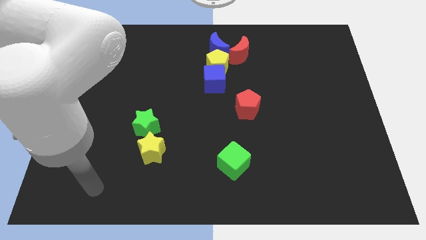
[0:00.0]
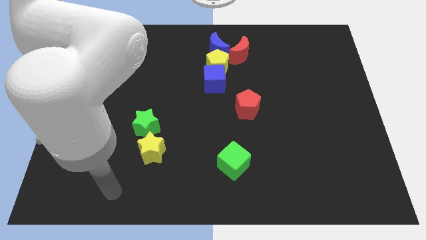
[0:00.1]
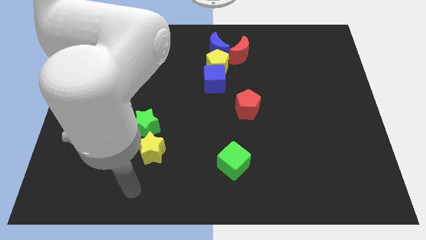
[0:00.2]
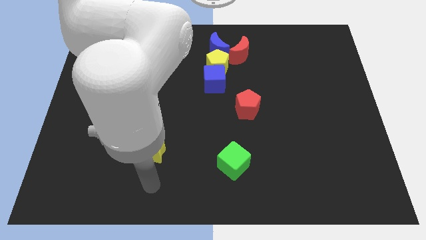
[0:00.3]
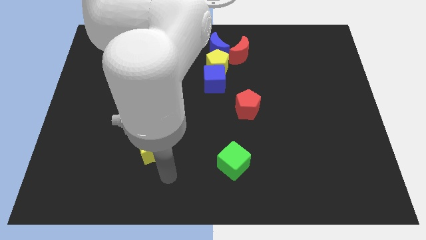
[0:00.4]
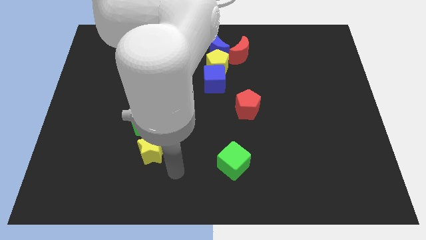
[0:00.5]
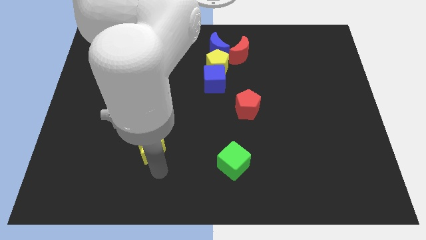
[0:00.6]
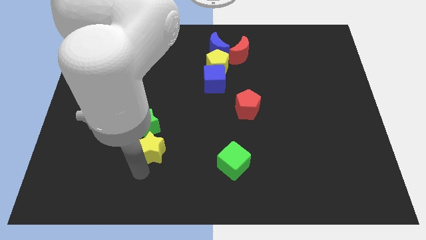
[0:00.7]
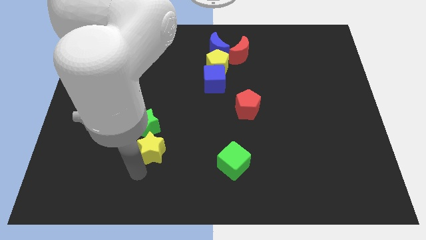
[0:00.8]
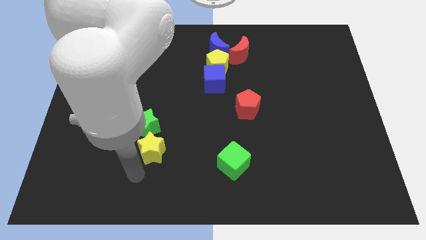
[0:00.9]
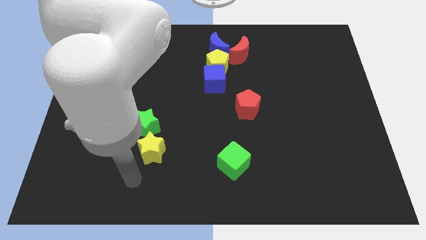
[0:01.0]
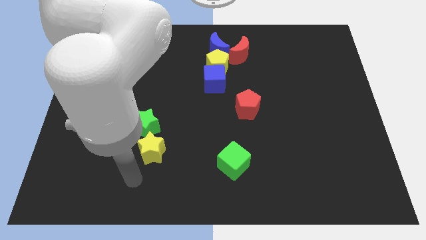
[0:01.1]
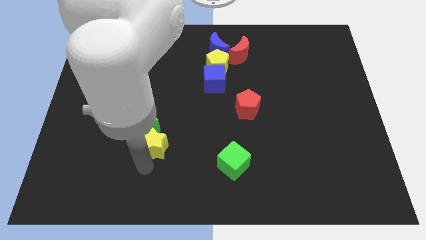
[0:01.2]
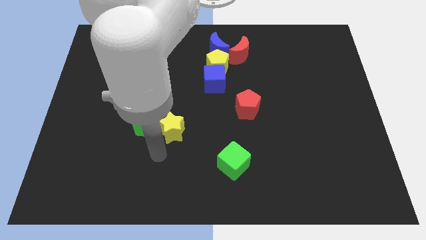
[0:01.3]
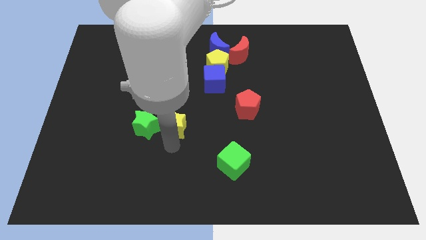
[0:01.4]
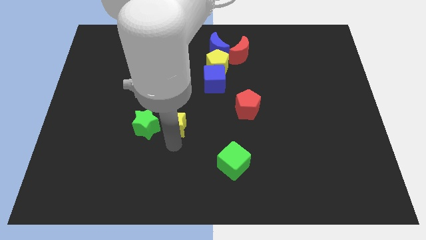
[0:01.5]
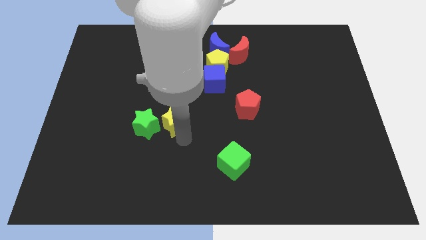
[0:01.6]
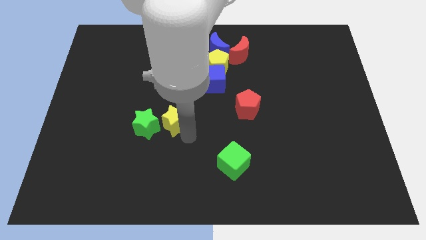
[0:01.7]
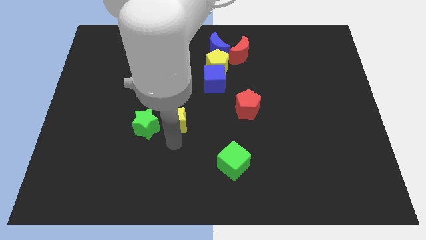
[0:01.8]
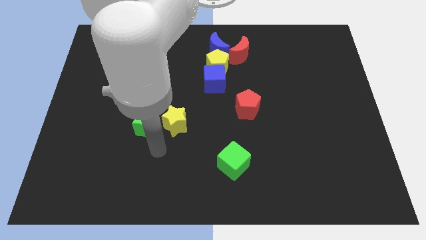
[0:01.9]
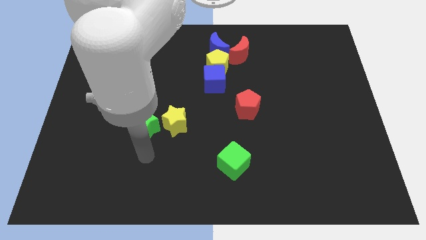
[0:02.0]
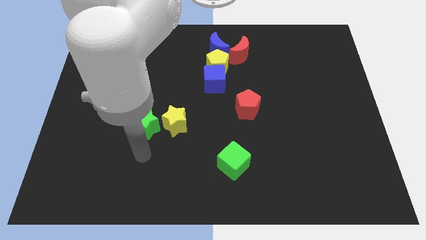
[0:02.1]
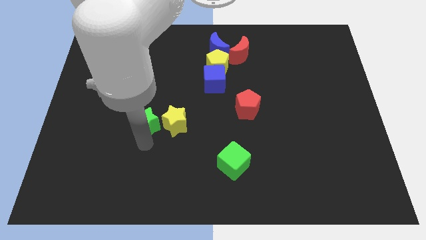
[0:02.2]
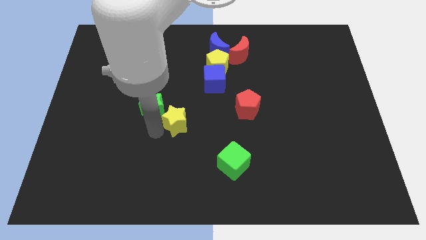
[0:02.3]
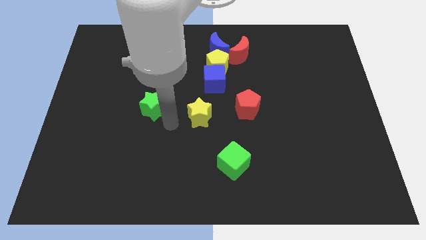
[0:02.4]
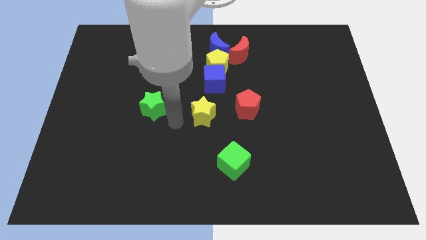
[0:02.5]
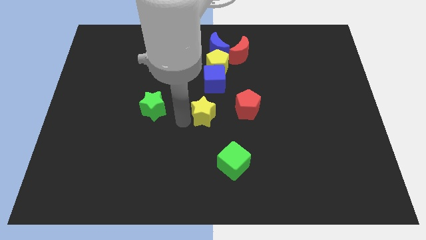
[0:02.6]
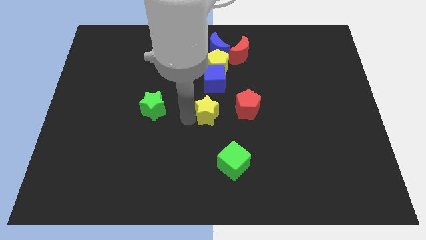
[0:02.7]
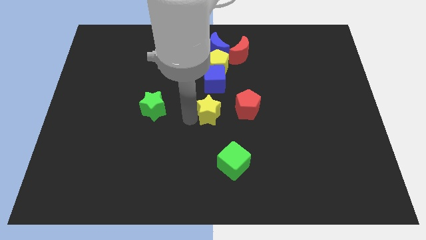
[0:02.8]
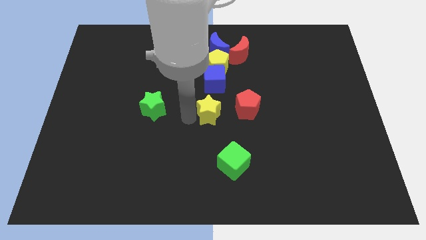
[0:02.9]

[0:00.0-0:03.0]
separate the yellow star and green star

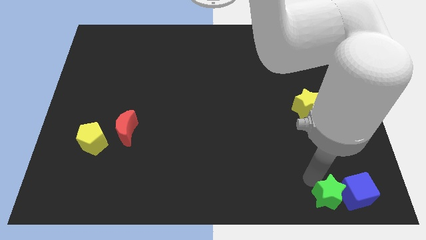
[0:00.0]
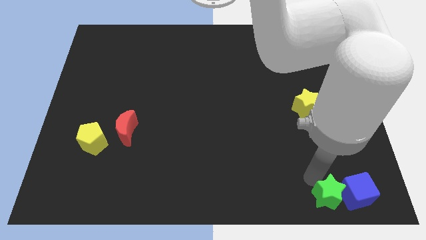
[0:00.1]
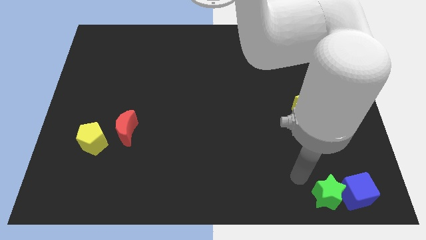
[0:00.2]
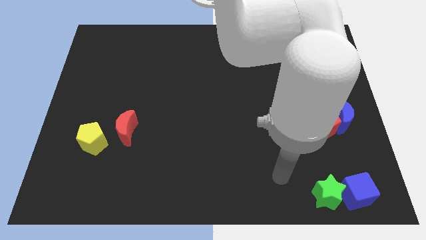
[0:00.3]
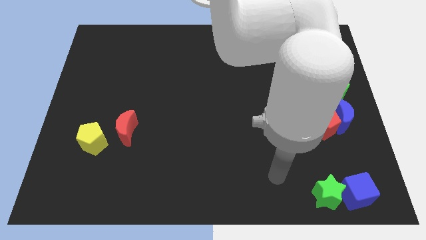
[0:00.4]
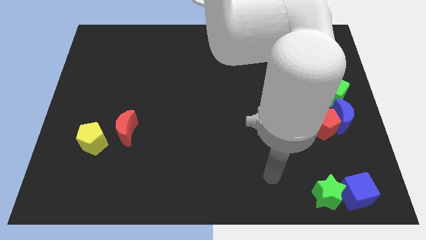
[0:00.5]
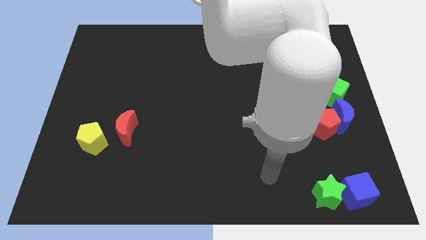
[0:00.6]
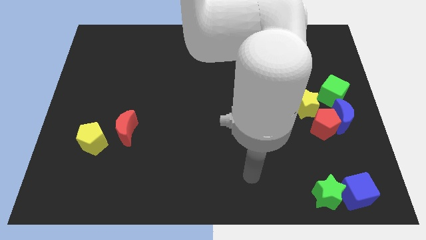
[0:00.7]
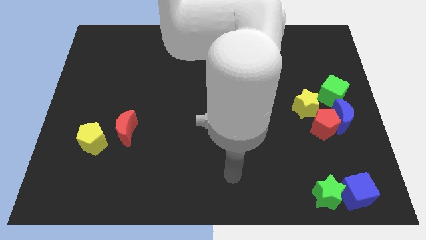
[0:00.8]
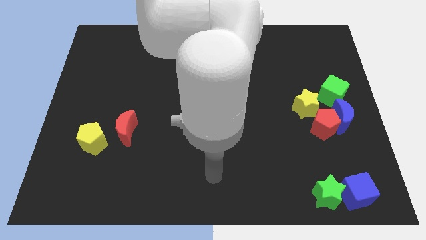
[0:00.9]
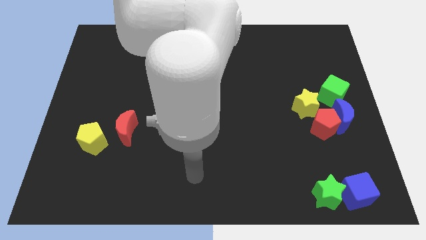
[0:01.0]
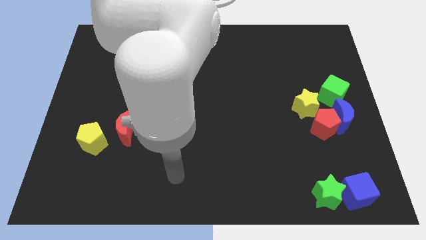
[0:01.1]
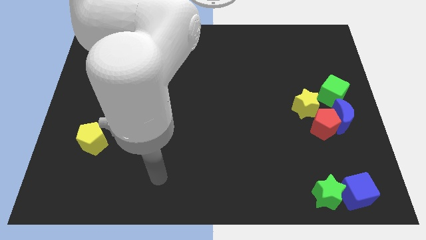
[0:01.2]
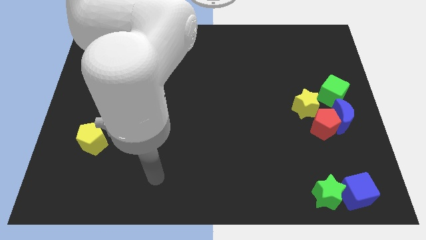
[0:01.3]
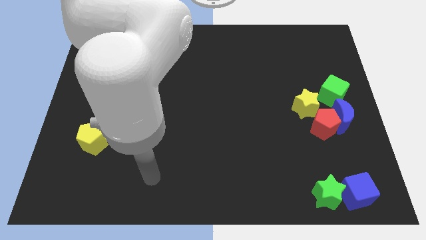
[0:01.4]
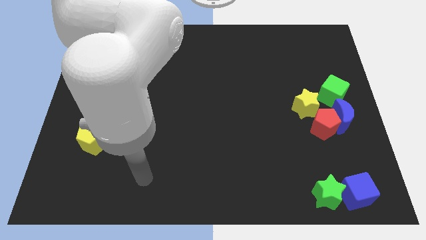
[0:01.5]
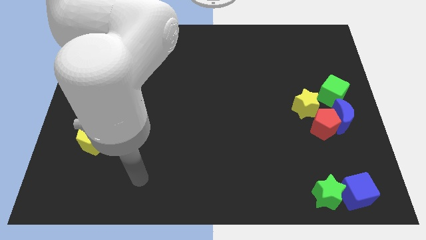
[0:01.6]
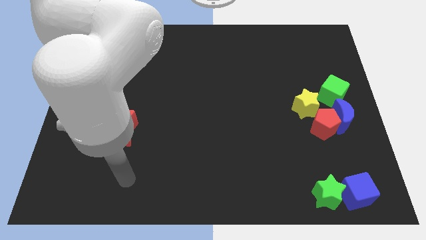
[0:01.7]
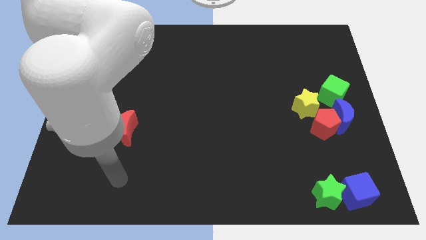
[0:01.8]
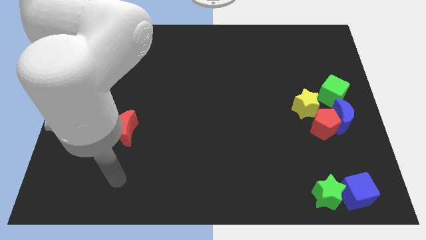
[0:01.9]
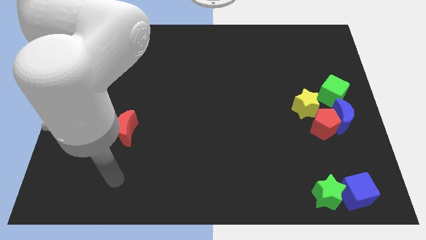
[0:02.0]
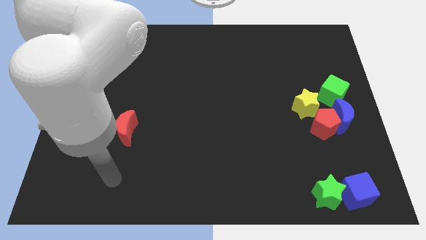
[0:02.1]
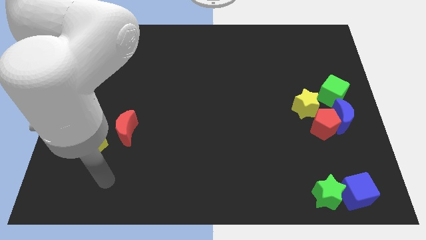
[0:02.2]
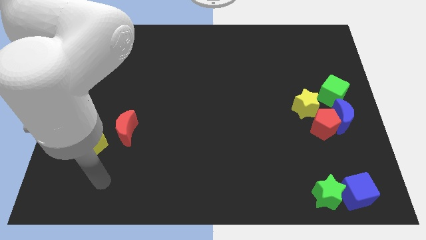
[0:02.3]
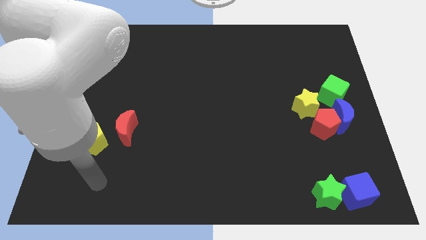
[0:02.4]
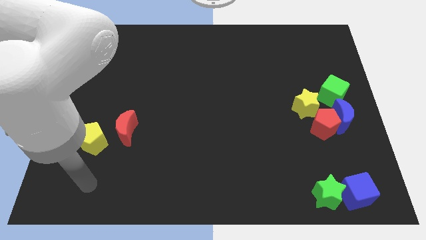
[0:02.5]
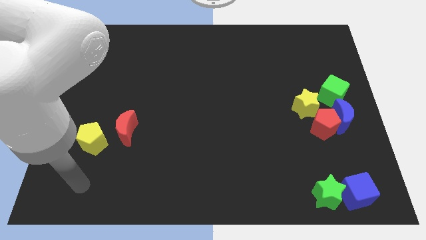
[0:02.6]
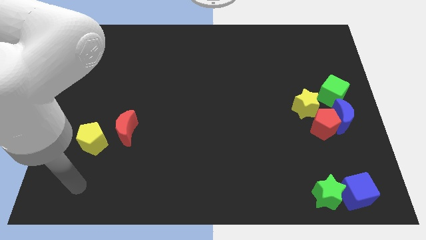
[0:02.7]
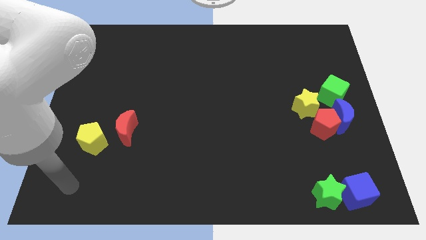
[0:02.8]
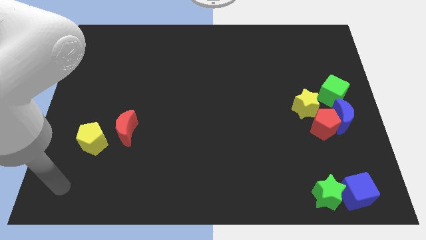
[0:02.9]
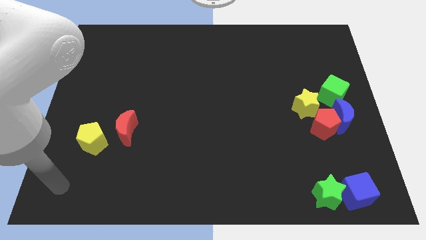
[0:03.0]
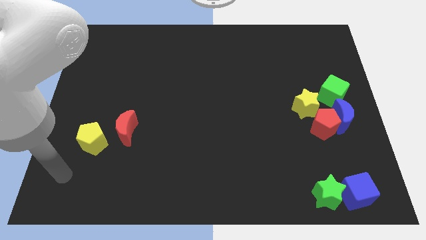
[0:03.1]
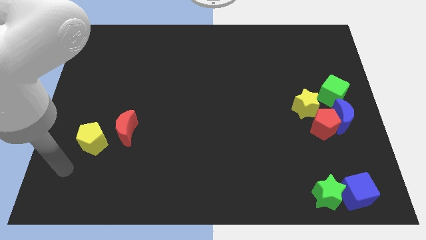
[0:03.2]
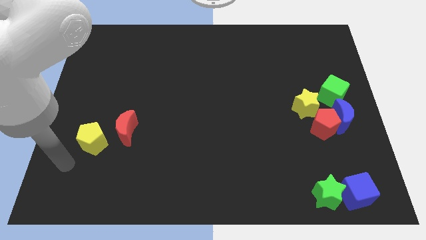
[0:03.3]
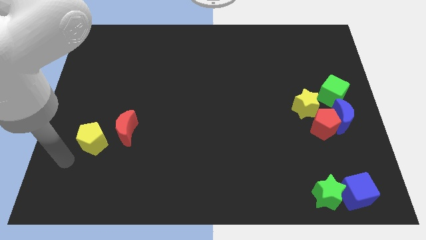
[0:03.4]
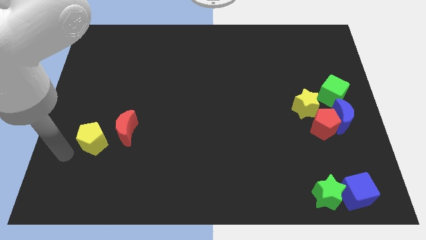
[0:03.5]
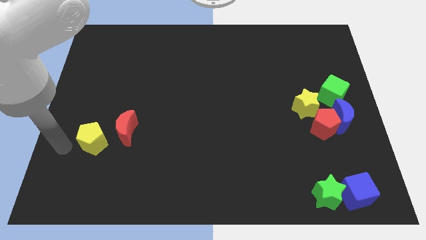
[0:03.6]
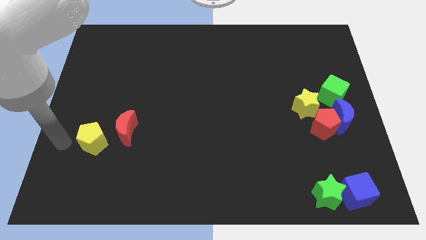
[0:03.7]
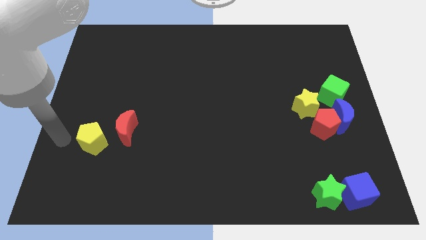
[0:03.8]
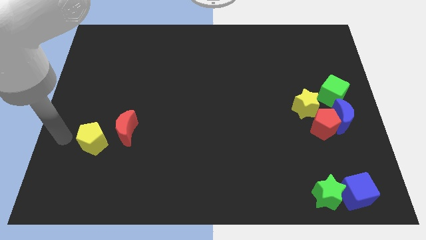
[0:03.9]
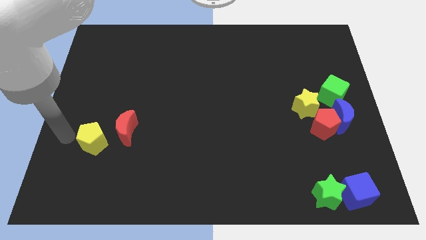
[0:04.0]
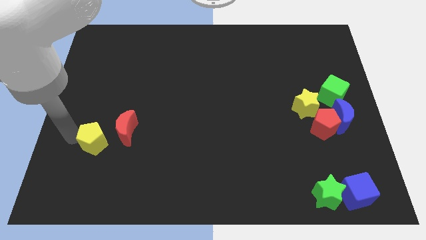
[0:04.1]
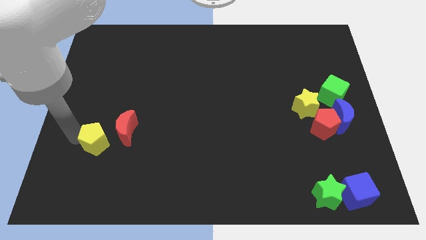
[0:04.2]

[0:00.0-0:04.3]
move arm near yellow pentagon

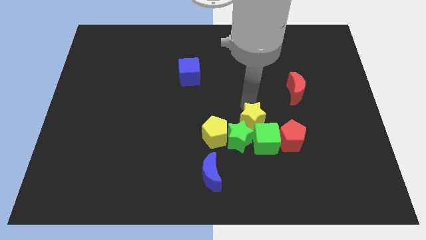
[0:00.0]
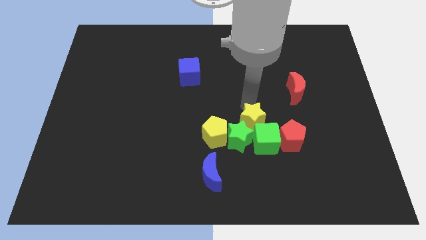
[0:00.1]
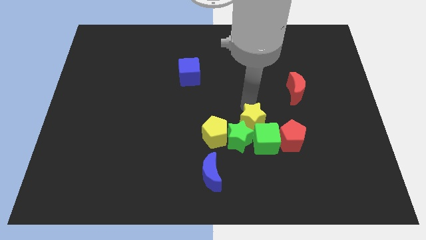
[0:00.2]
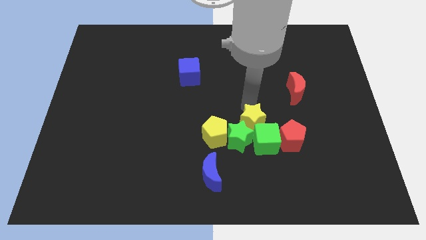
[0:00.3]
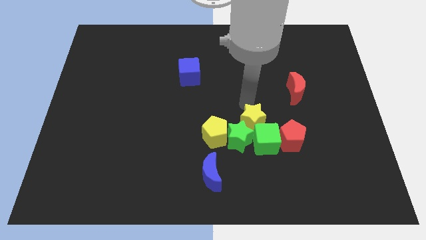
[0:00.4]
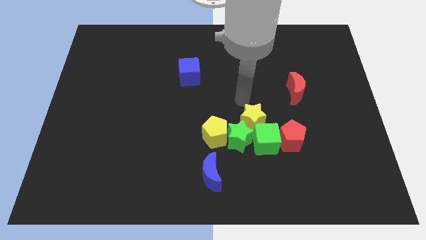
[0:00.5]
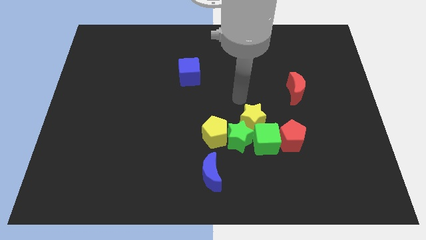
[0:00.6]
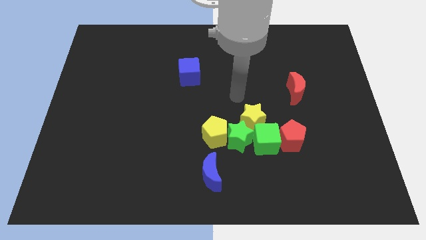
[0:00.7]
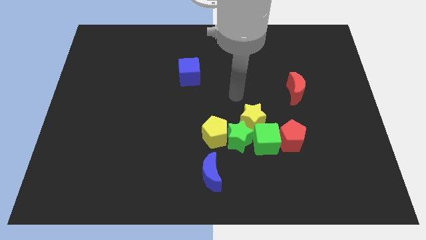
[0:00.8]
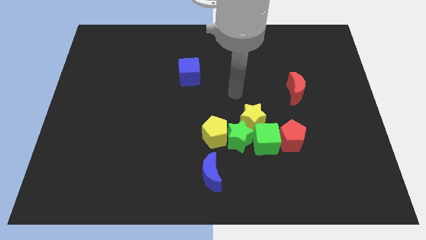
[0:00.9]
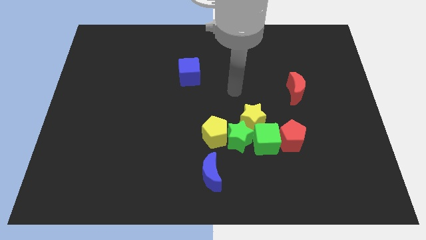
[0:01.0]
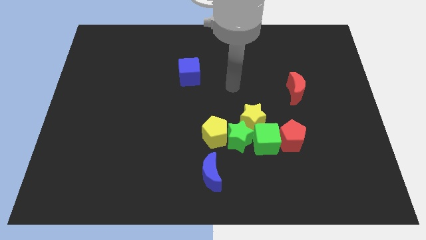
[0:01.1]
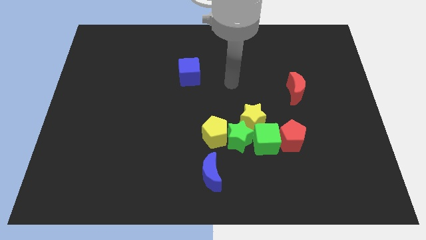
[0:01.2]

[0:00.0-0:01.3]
move arm in between blue cube and red moon

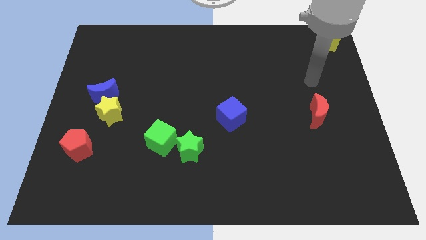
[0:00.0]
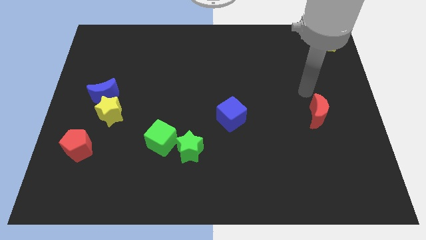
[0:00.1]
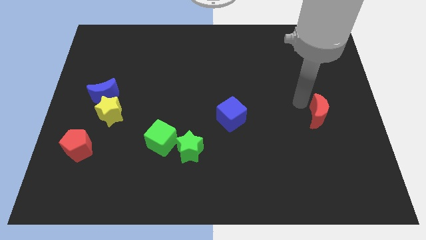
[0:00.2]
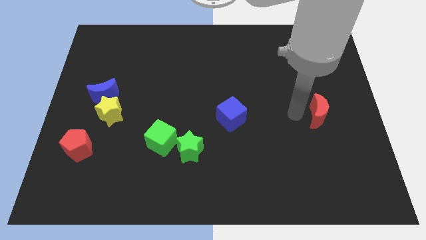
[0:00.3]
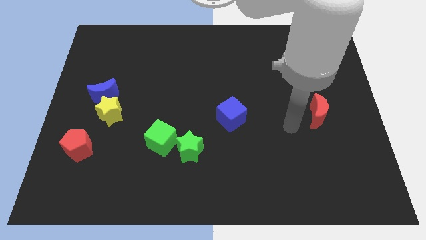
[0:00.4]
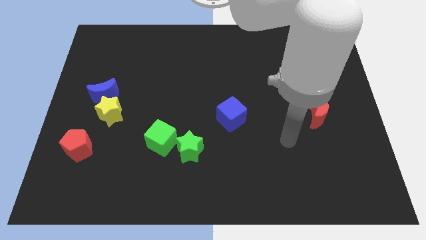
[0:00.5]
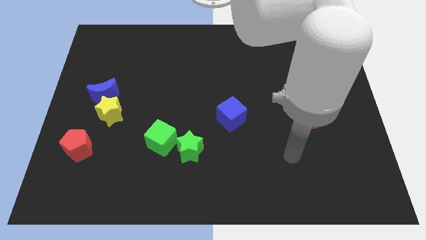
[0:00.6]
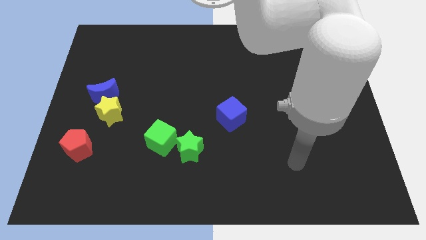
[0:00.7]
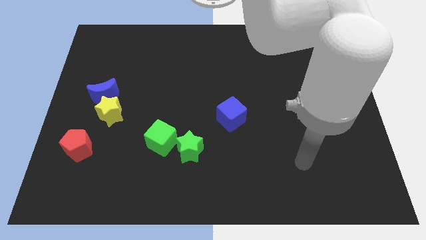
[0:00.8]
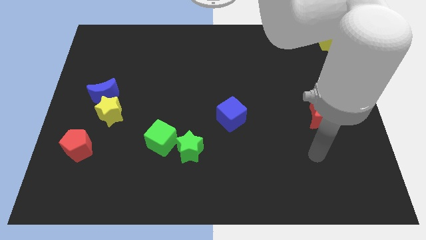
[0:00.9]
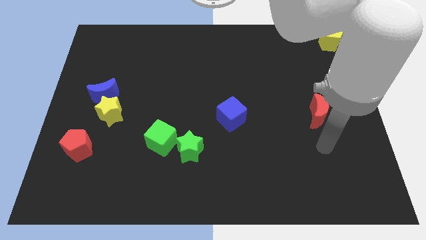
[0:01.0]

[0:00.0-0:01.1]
place your hand below the red moon
